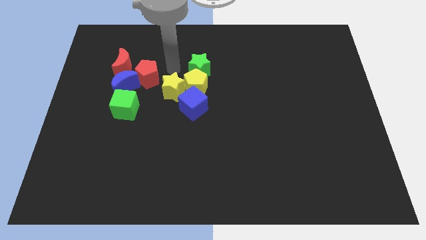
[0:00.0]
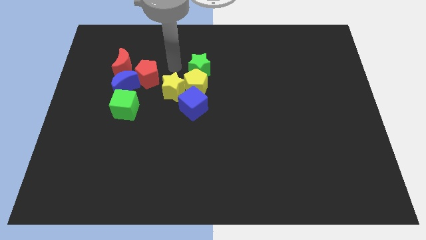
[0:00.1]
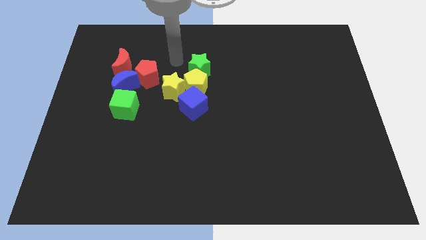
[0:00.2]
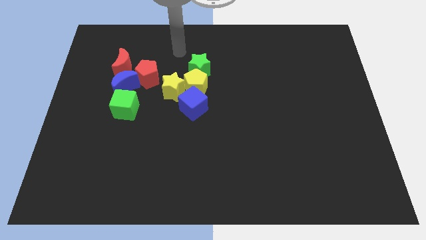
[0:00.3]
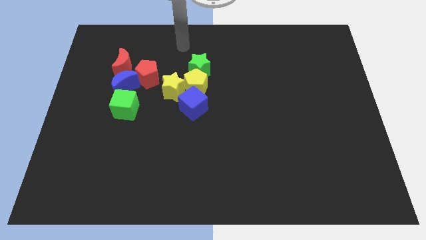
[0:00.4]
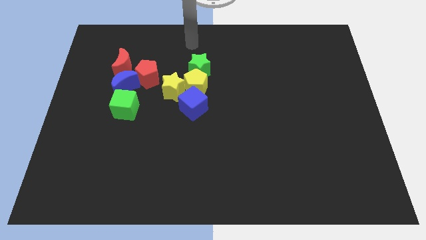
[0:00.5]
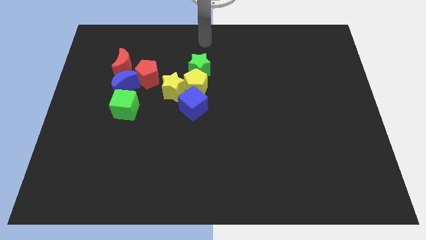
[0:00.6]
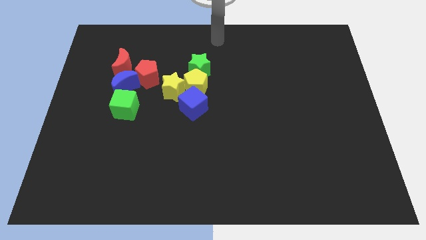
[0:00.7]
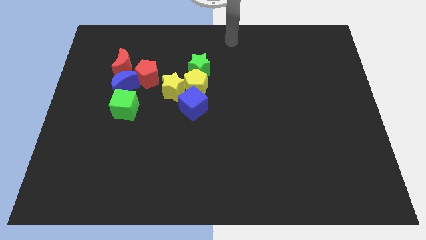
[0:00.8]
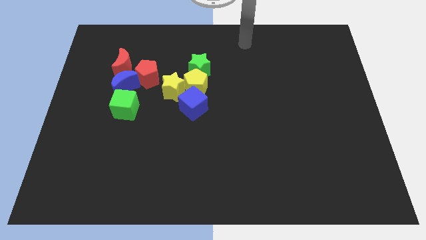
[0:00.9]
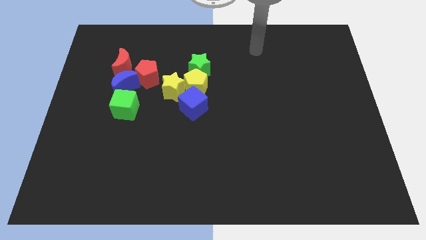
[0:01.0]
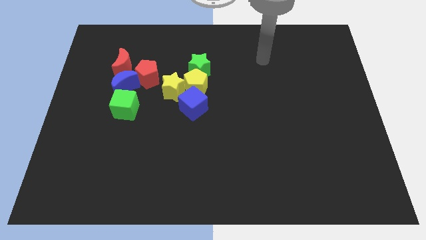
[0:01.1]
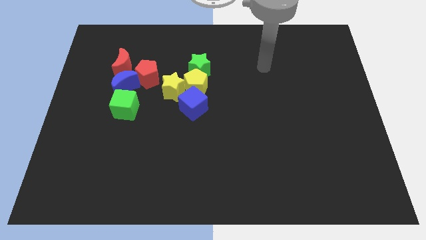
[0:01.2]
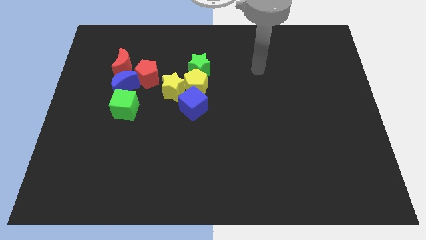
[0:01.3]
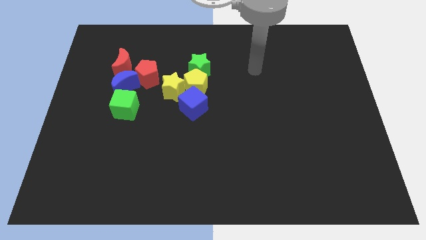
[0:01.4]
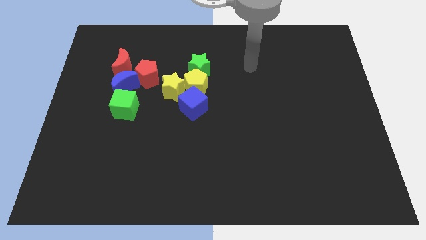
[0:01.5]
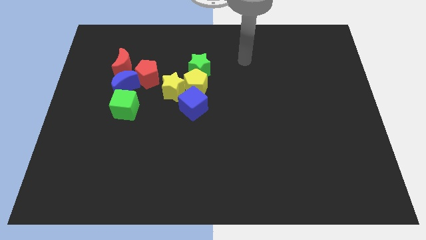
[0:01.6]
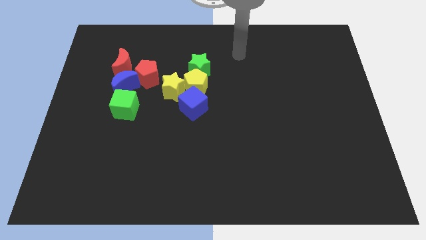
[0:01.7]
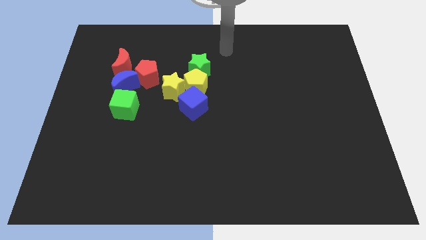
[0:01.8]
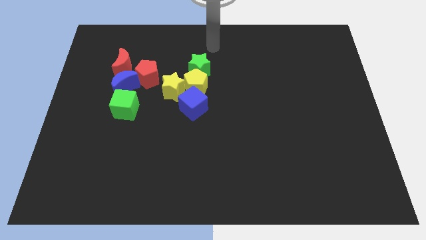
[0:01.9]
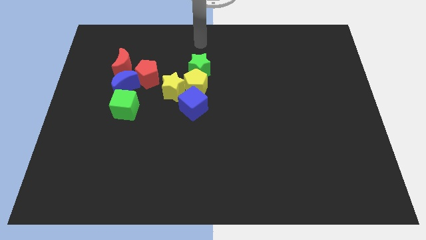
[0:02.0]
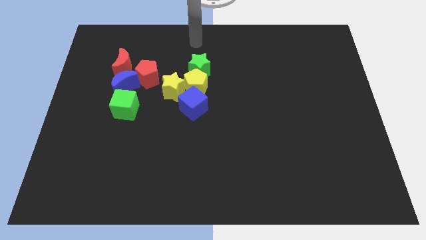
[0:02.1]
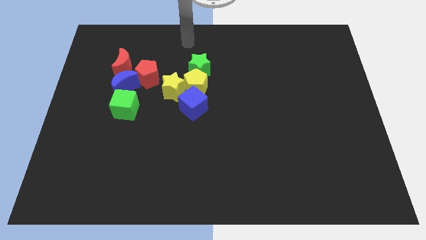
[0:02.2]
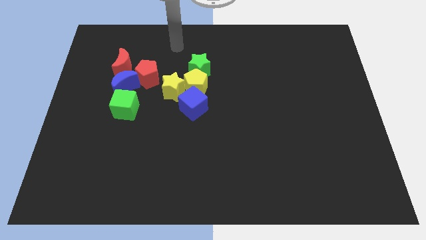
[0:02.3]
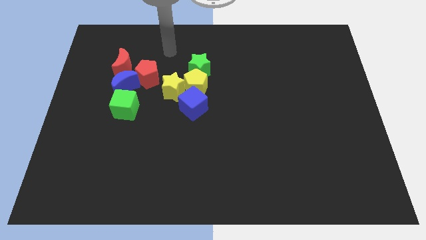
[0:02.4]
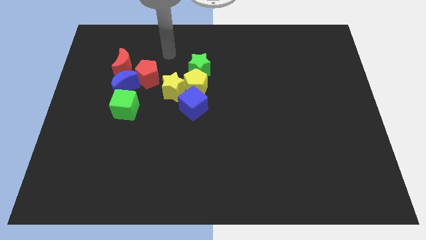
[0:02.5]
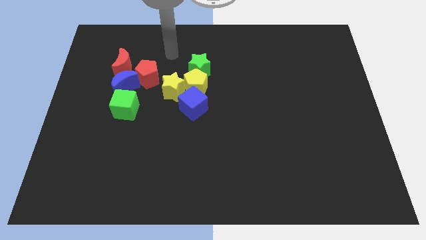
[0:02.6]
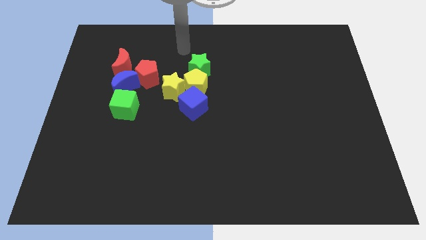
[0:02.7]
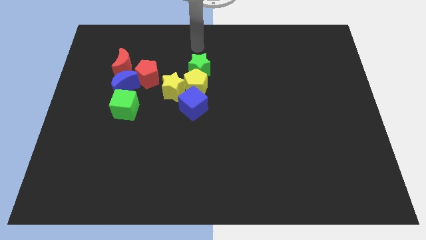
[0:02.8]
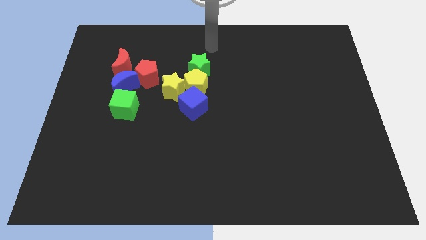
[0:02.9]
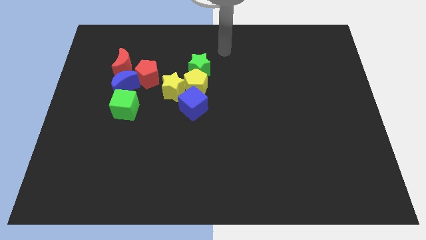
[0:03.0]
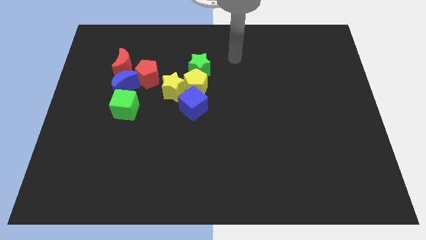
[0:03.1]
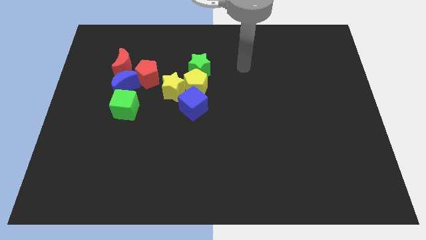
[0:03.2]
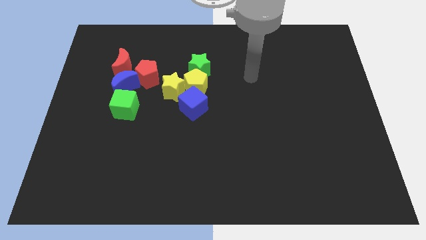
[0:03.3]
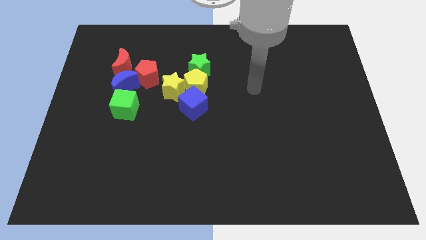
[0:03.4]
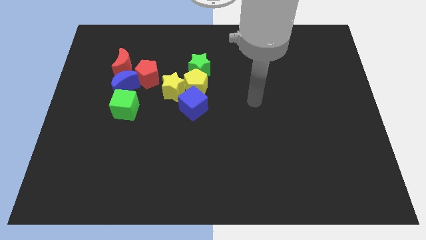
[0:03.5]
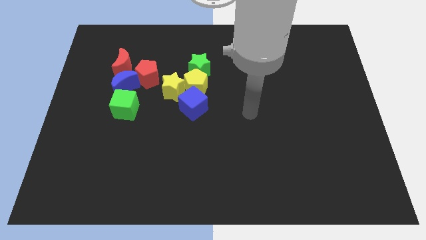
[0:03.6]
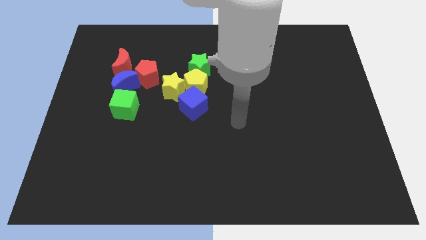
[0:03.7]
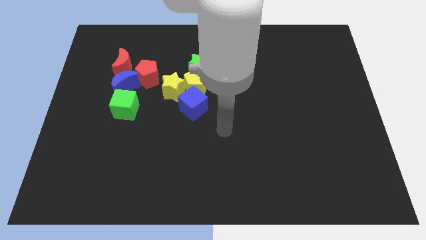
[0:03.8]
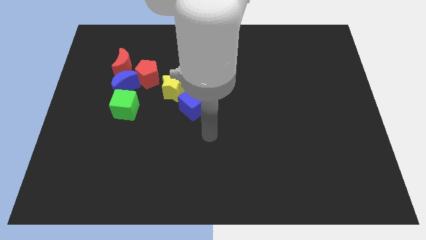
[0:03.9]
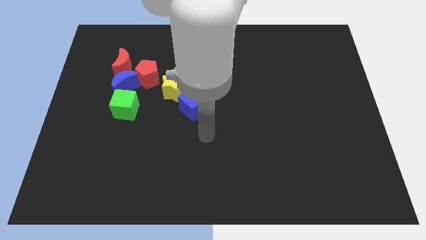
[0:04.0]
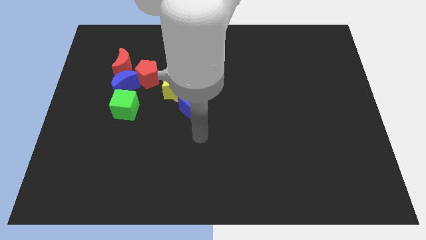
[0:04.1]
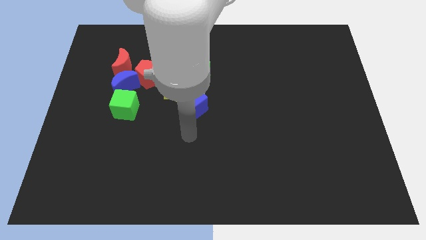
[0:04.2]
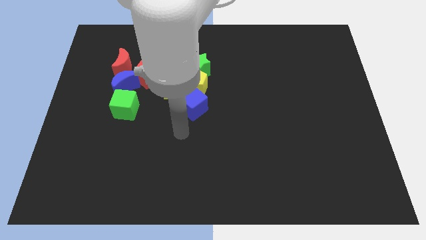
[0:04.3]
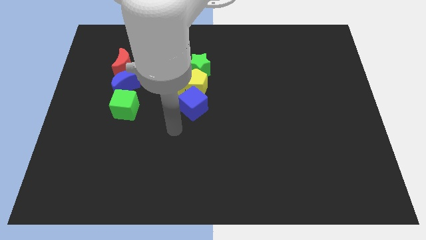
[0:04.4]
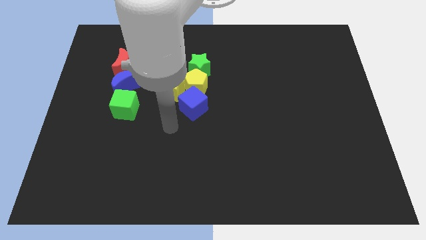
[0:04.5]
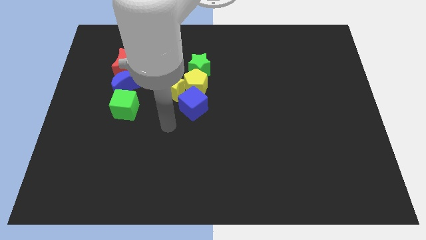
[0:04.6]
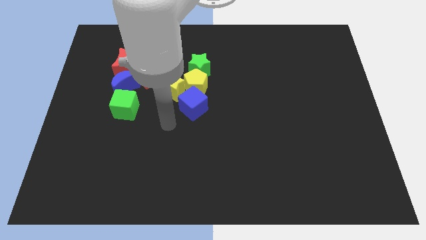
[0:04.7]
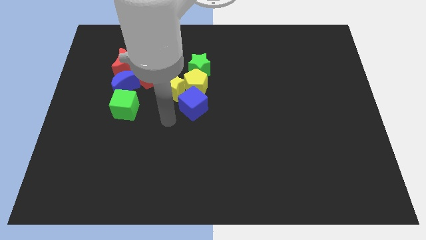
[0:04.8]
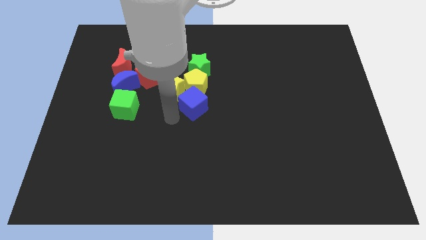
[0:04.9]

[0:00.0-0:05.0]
move your arm away from the yellow star

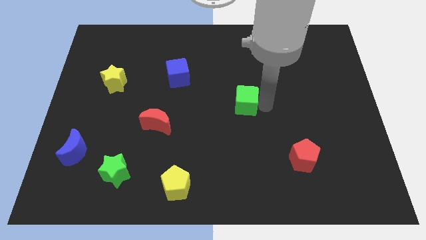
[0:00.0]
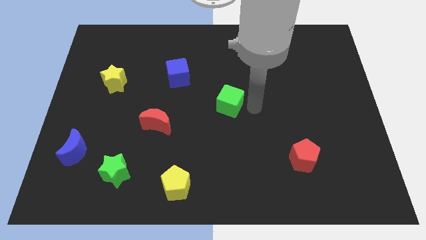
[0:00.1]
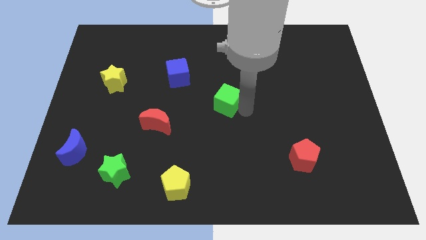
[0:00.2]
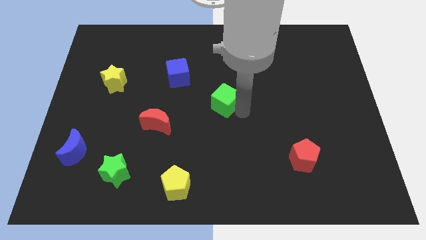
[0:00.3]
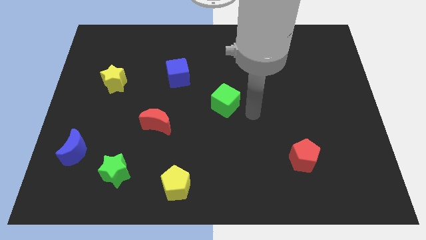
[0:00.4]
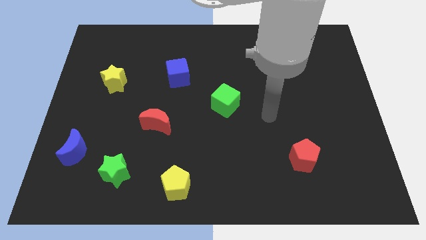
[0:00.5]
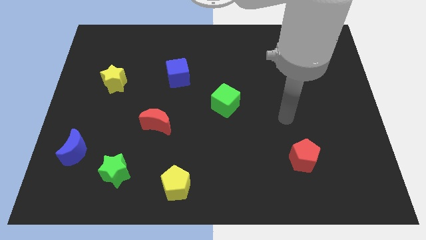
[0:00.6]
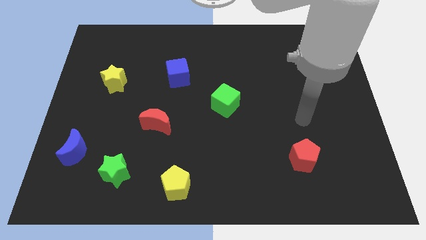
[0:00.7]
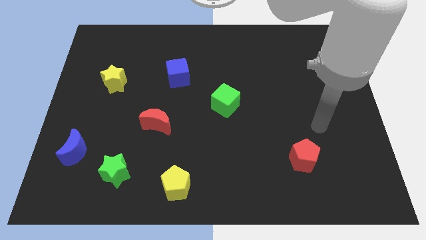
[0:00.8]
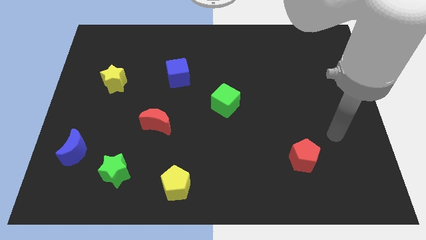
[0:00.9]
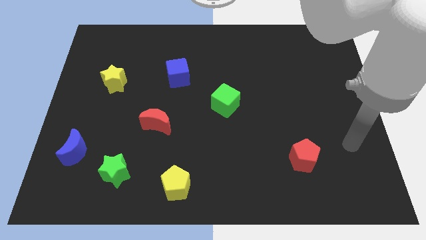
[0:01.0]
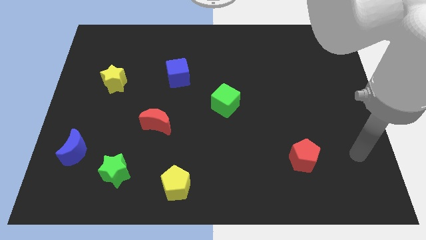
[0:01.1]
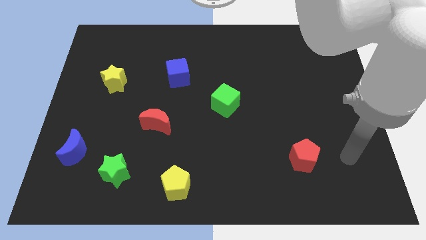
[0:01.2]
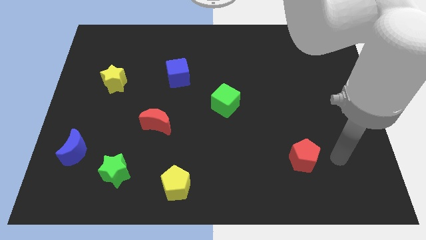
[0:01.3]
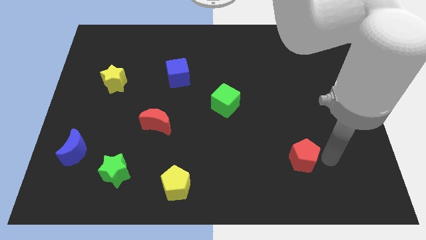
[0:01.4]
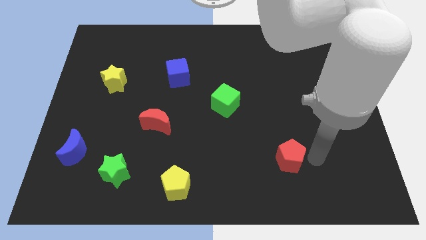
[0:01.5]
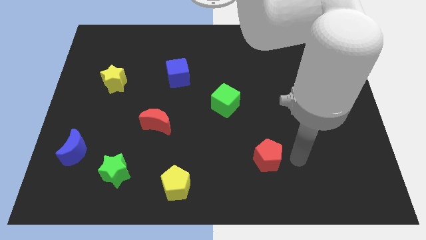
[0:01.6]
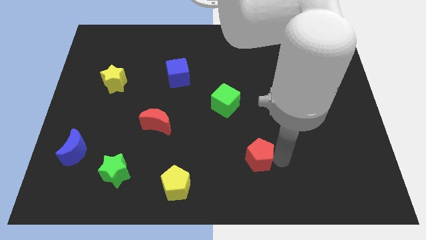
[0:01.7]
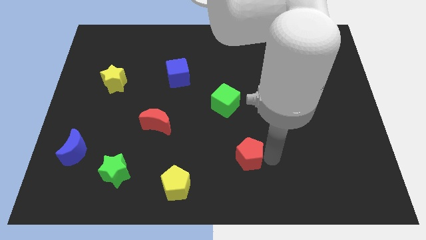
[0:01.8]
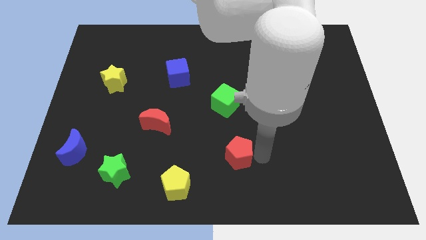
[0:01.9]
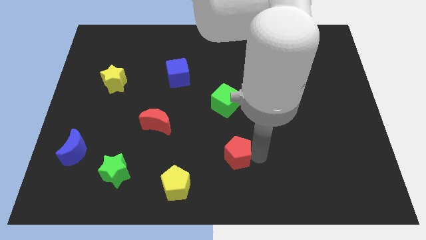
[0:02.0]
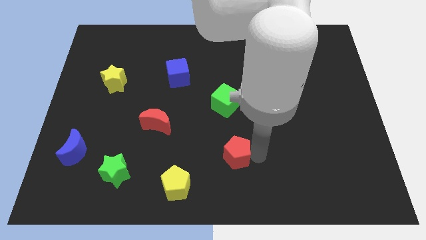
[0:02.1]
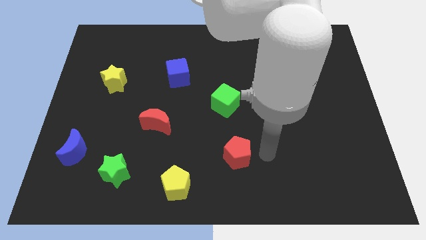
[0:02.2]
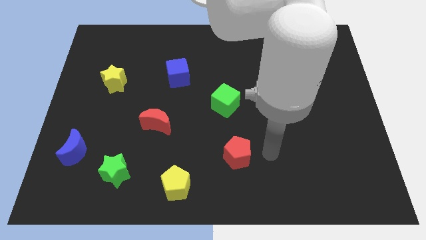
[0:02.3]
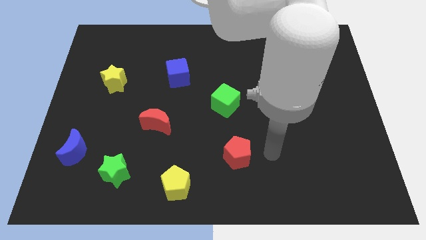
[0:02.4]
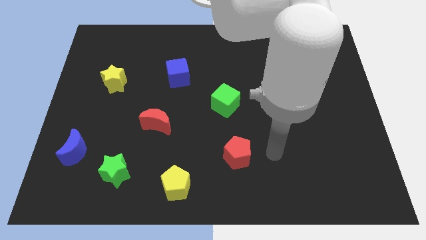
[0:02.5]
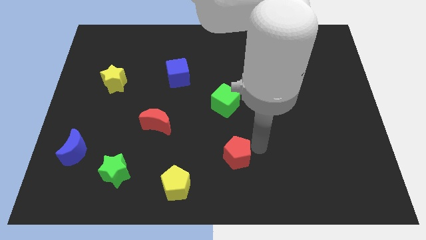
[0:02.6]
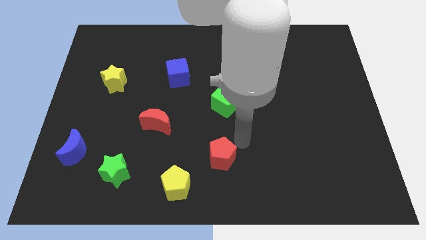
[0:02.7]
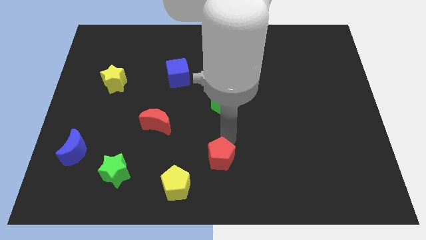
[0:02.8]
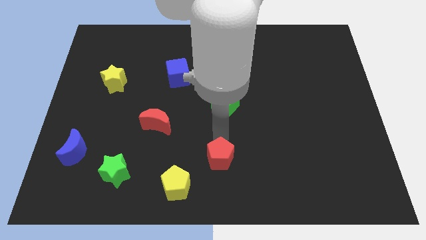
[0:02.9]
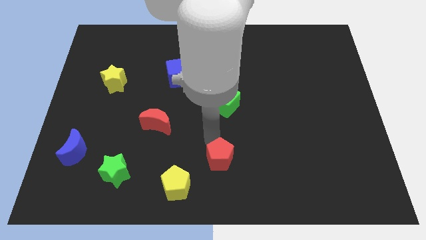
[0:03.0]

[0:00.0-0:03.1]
slide green cube and red pentagon to the left to make a vertical line

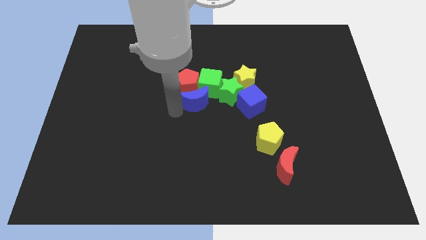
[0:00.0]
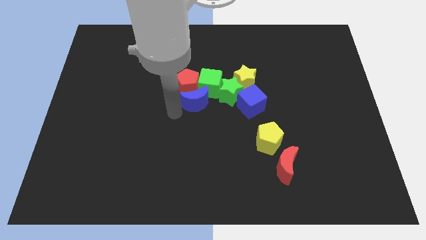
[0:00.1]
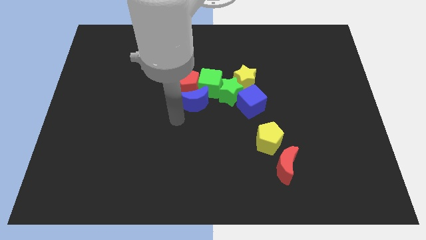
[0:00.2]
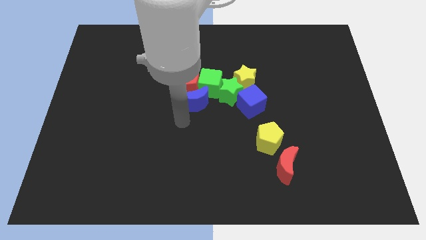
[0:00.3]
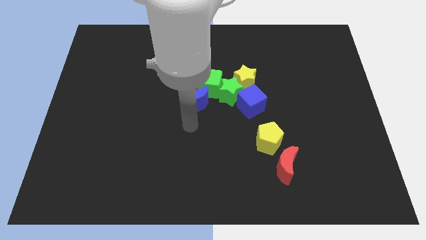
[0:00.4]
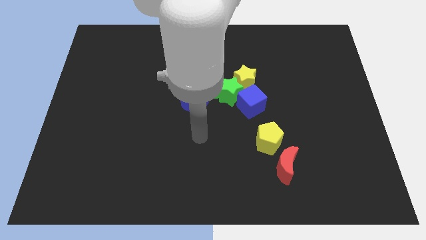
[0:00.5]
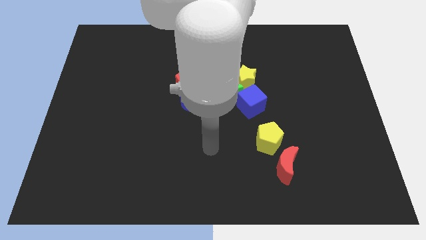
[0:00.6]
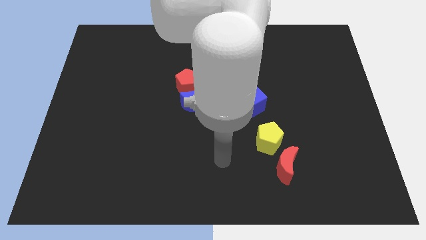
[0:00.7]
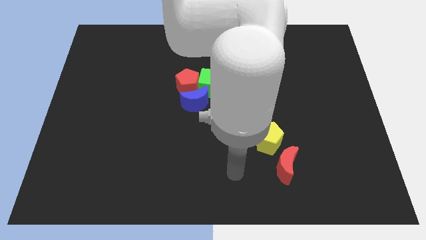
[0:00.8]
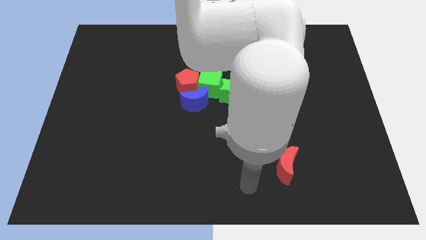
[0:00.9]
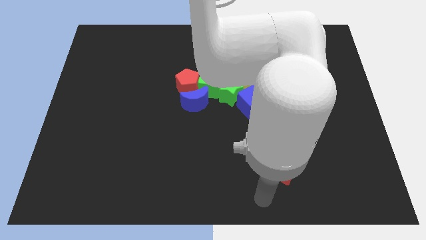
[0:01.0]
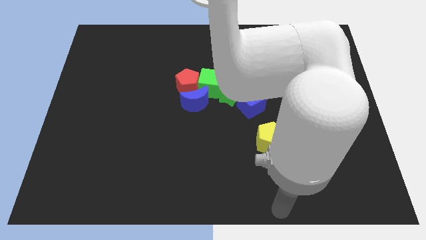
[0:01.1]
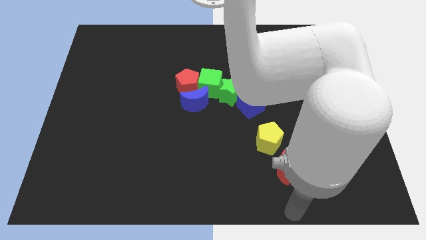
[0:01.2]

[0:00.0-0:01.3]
place your arm below the red crescent
